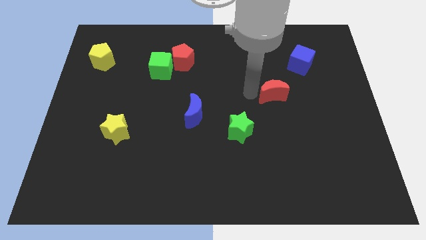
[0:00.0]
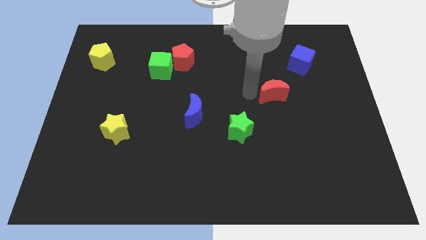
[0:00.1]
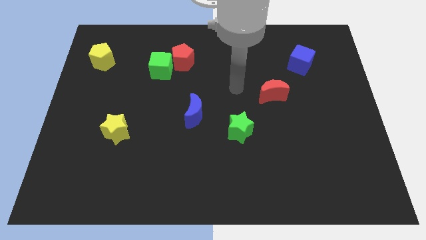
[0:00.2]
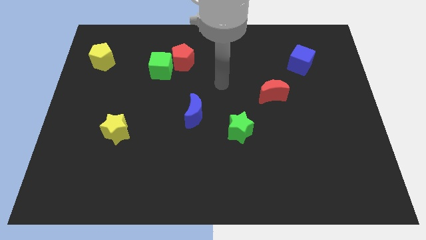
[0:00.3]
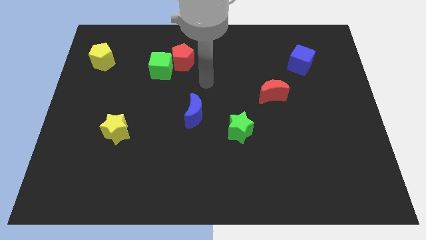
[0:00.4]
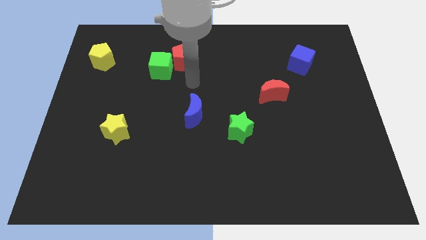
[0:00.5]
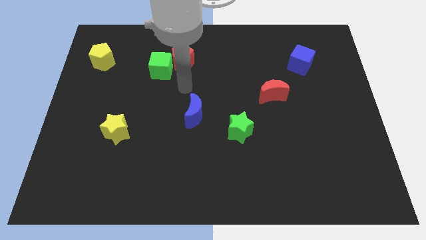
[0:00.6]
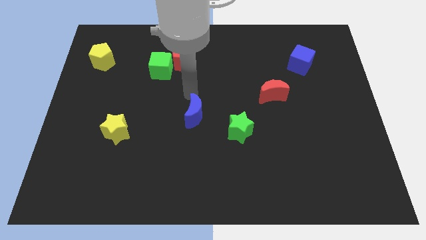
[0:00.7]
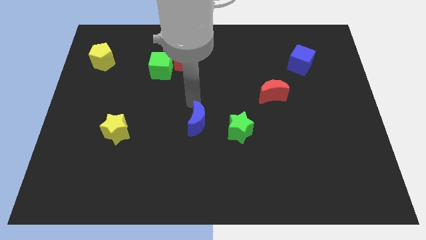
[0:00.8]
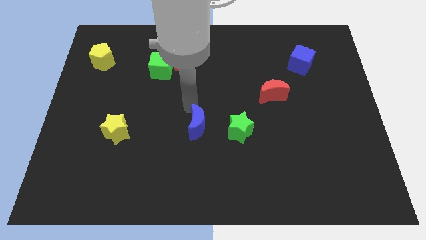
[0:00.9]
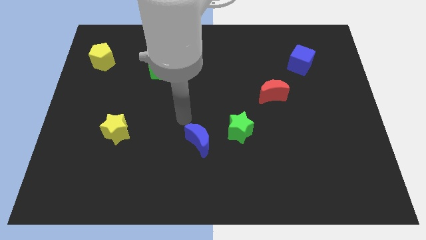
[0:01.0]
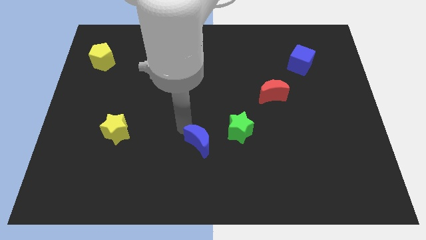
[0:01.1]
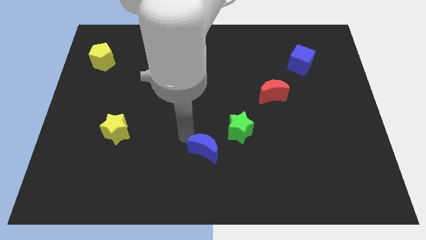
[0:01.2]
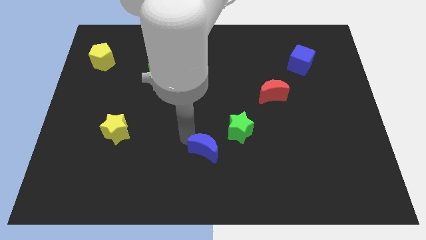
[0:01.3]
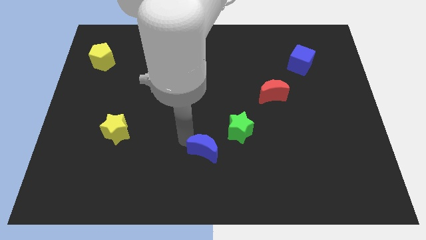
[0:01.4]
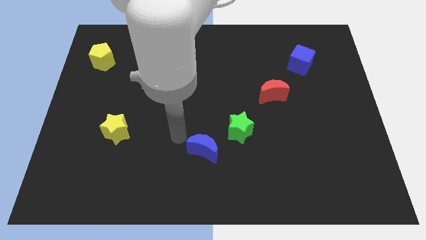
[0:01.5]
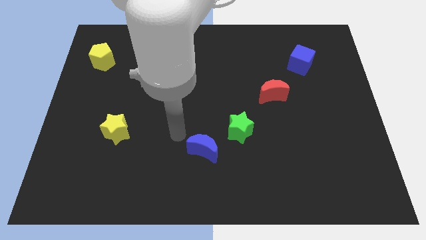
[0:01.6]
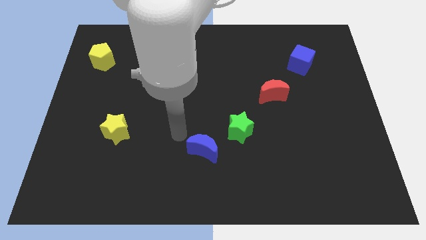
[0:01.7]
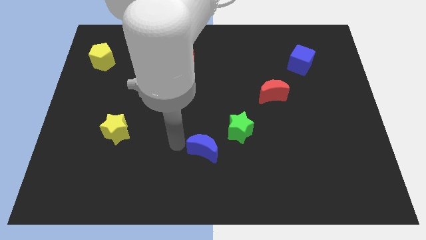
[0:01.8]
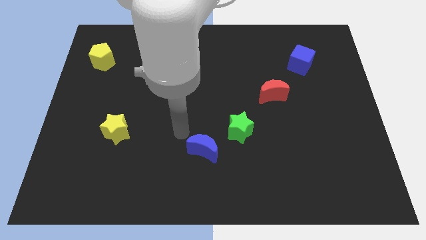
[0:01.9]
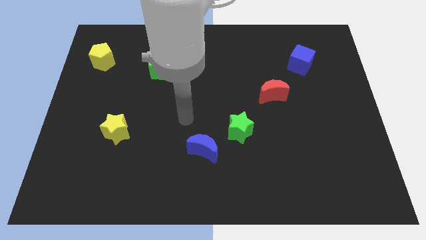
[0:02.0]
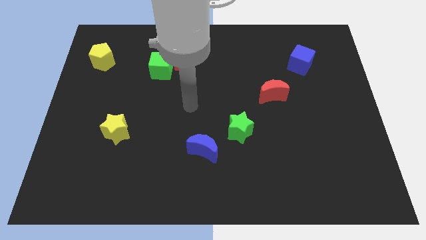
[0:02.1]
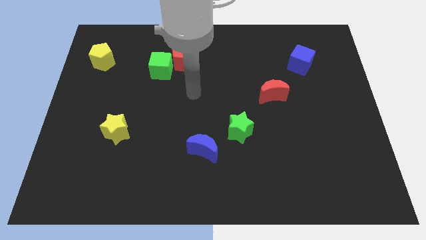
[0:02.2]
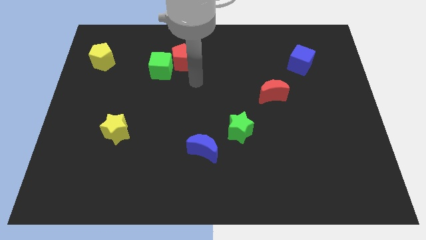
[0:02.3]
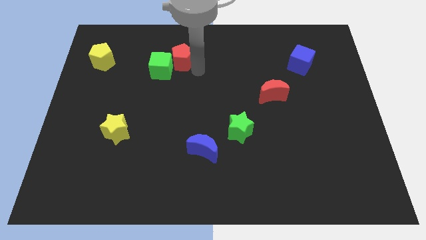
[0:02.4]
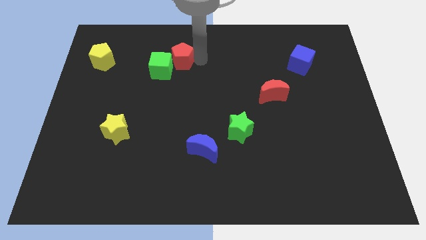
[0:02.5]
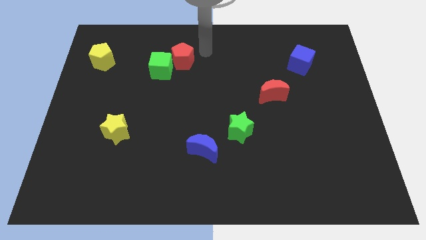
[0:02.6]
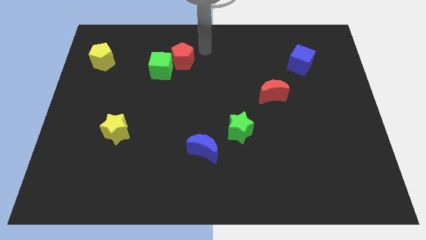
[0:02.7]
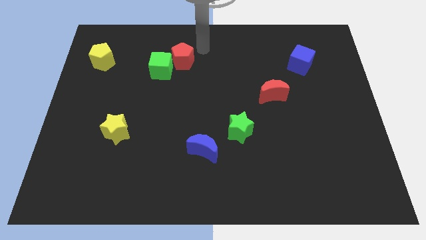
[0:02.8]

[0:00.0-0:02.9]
push blue crescent below the green star

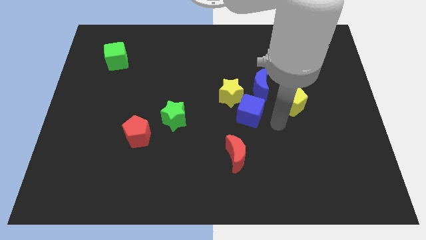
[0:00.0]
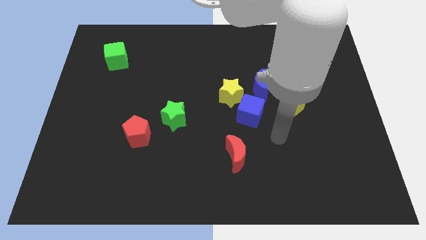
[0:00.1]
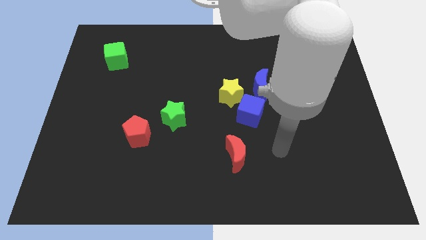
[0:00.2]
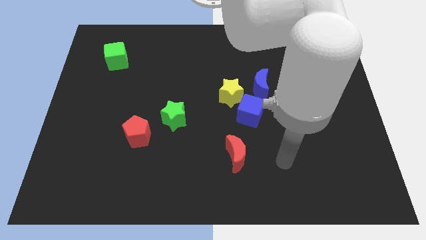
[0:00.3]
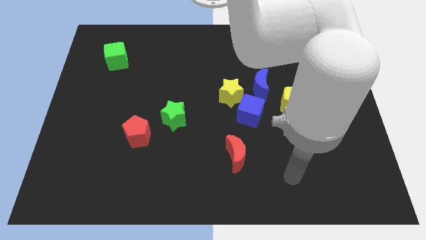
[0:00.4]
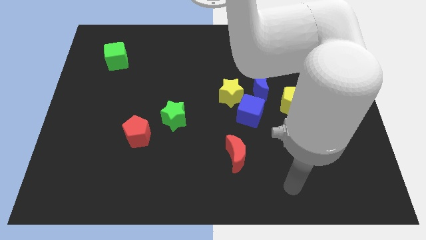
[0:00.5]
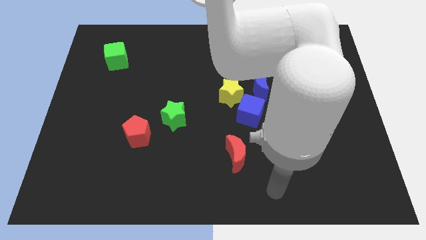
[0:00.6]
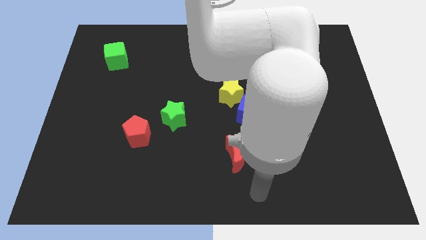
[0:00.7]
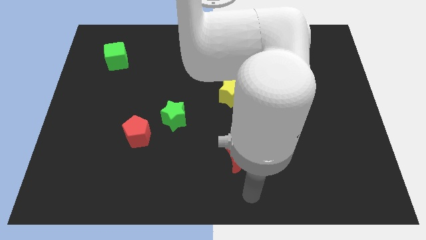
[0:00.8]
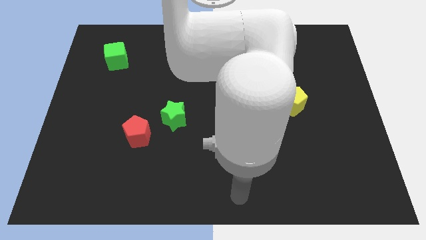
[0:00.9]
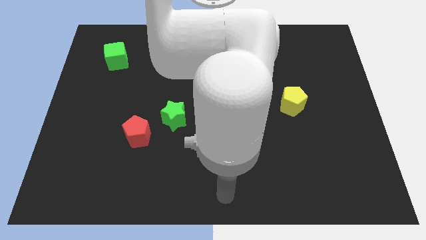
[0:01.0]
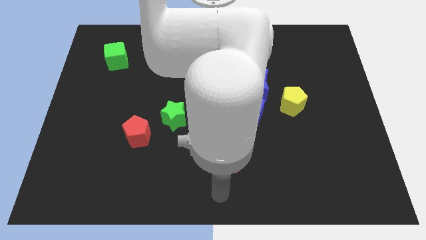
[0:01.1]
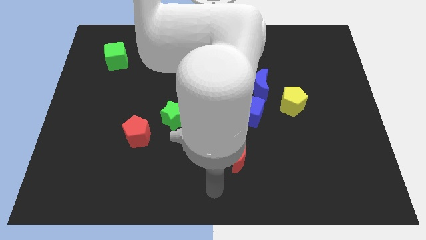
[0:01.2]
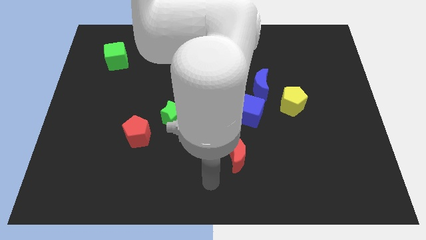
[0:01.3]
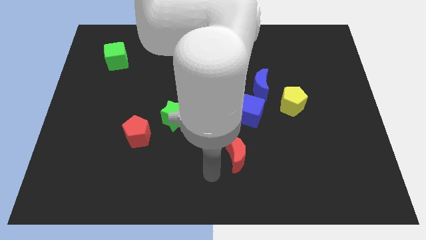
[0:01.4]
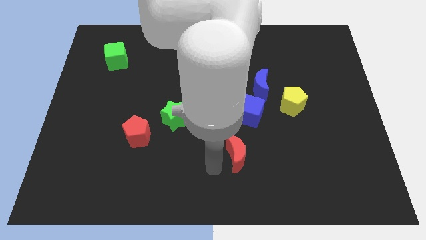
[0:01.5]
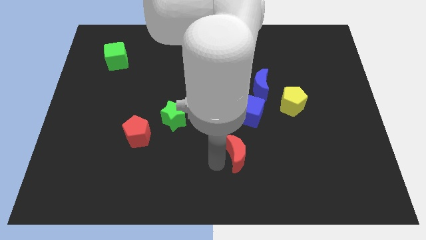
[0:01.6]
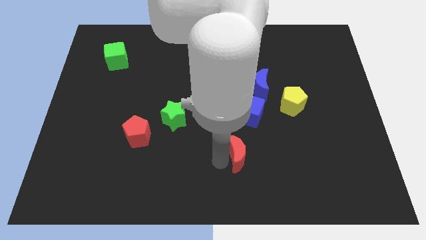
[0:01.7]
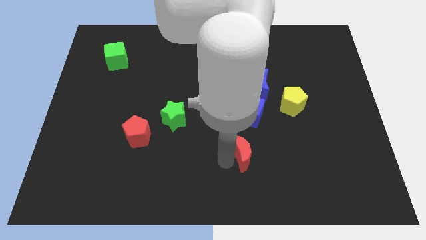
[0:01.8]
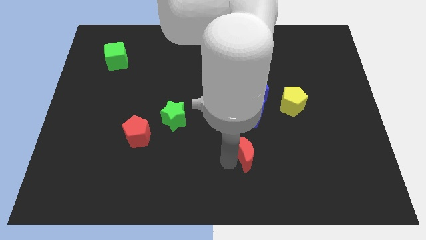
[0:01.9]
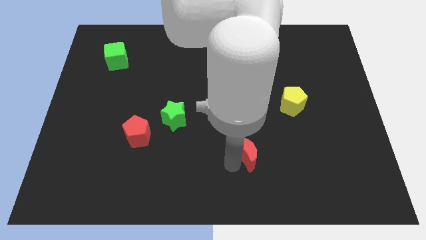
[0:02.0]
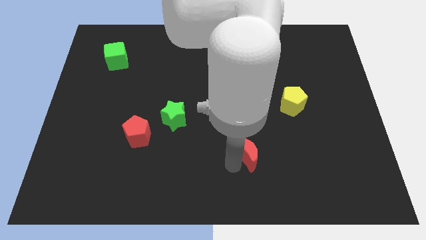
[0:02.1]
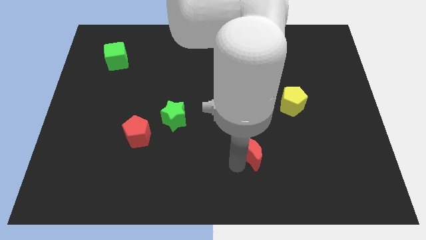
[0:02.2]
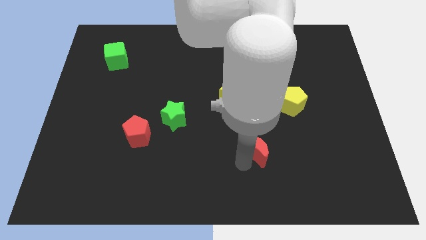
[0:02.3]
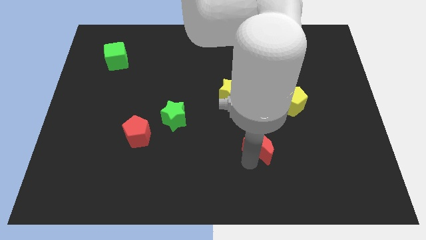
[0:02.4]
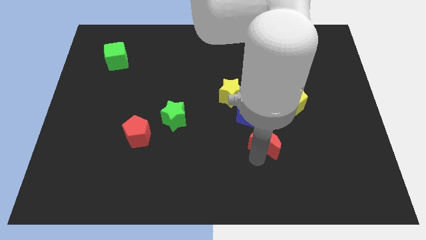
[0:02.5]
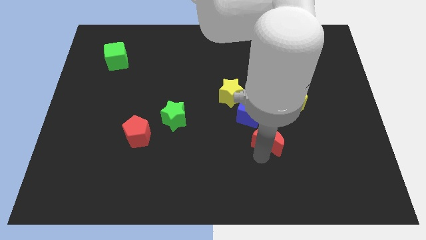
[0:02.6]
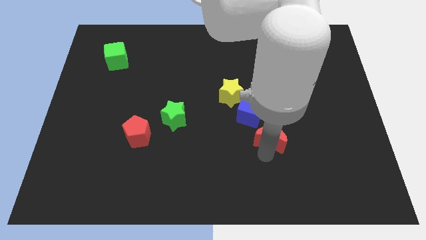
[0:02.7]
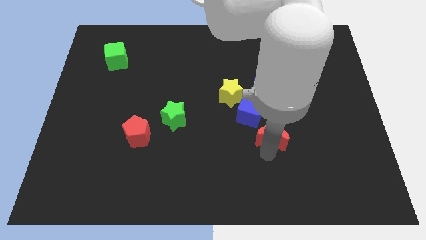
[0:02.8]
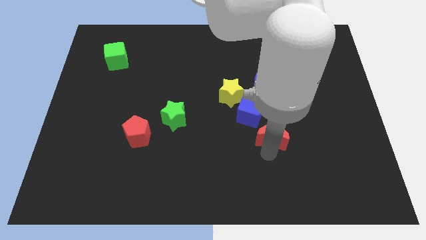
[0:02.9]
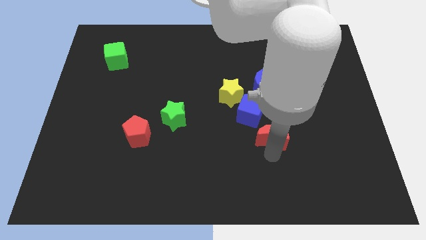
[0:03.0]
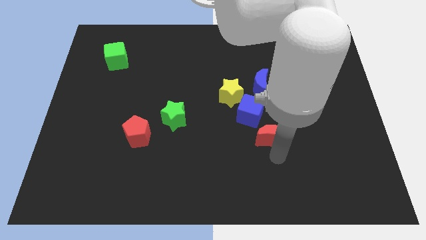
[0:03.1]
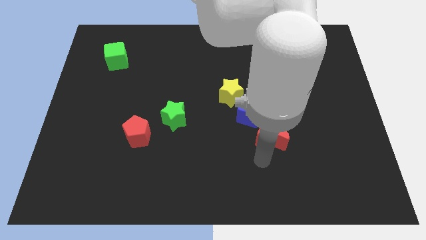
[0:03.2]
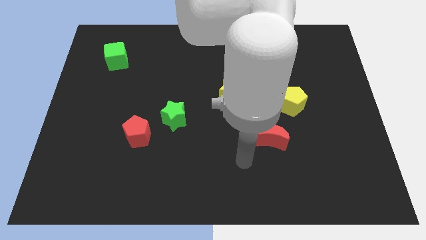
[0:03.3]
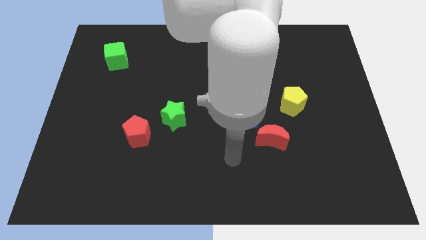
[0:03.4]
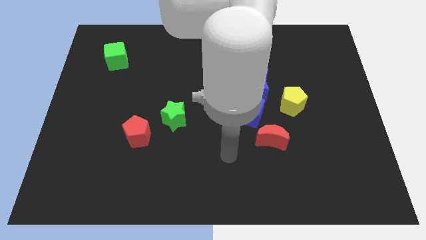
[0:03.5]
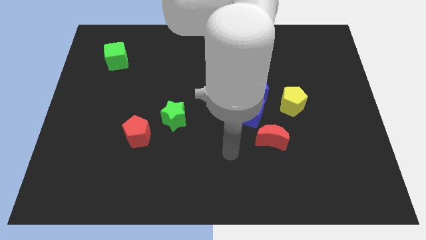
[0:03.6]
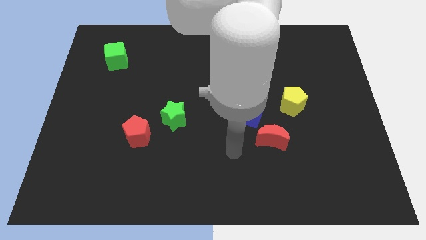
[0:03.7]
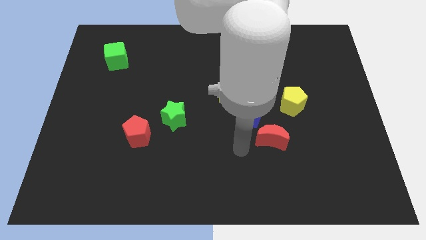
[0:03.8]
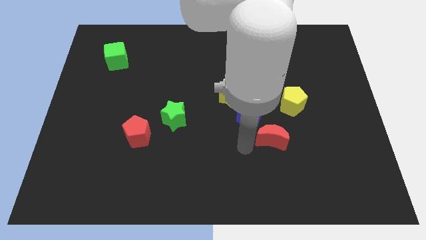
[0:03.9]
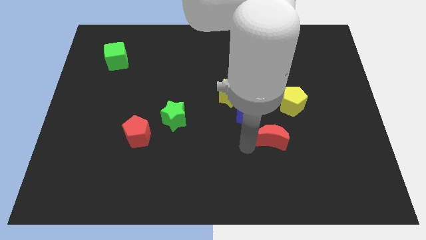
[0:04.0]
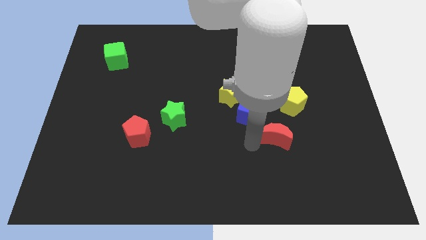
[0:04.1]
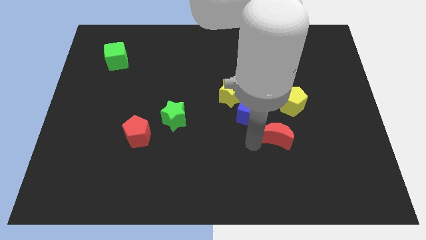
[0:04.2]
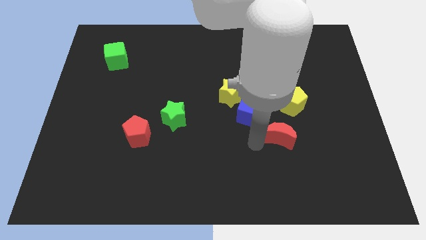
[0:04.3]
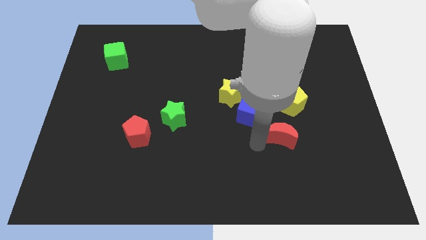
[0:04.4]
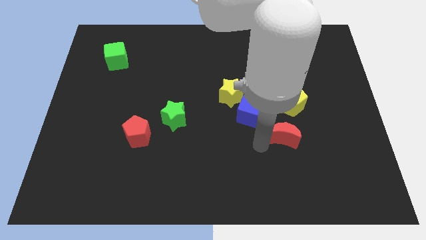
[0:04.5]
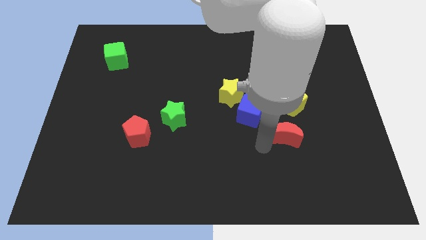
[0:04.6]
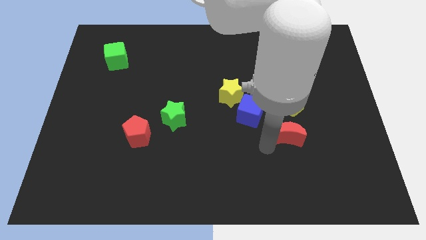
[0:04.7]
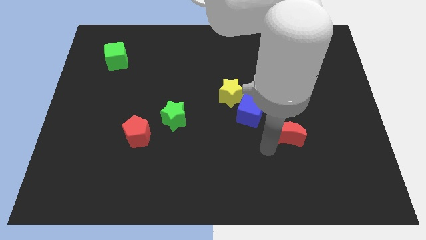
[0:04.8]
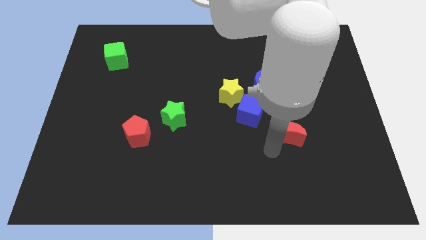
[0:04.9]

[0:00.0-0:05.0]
place the red moon to bottom of the yellow pentagon

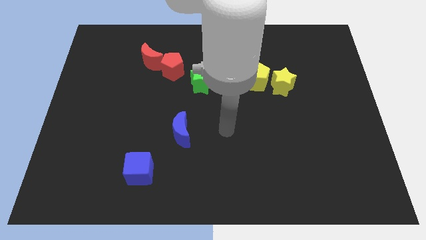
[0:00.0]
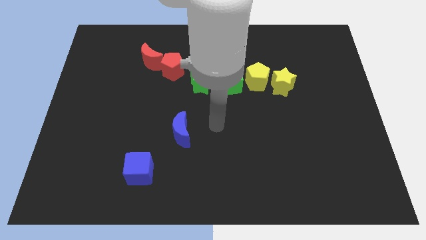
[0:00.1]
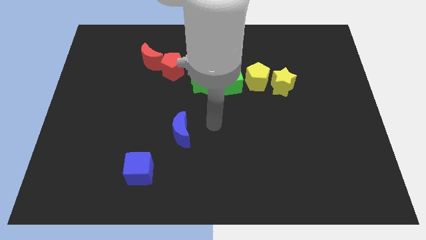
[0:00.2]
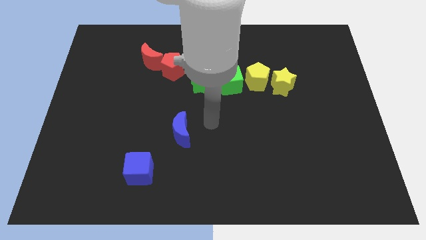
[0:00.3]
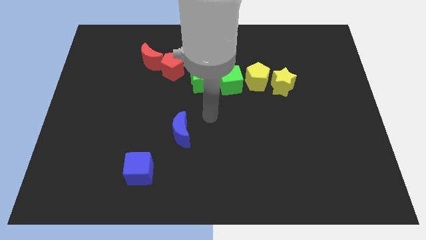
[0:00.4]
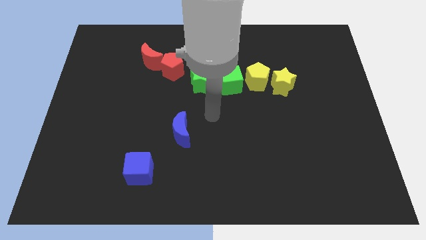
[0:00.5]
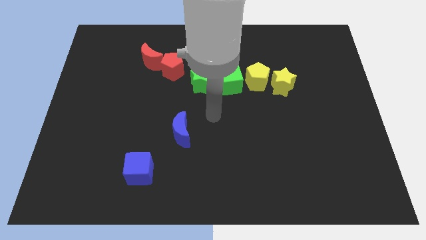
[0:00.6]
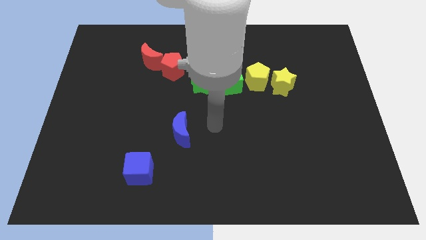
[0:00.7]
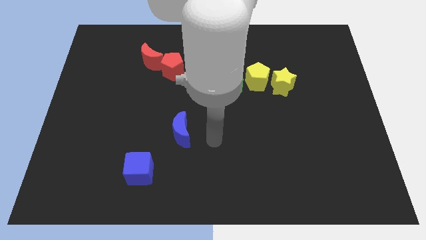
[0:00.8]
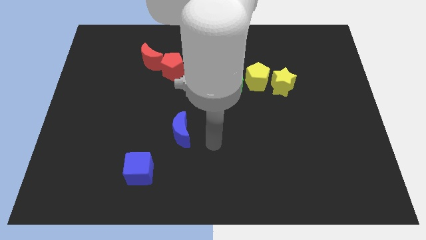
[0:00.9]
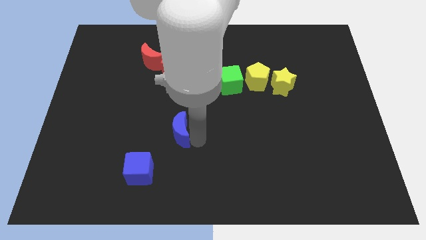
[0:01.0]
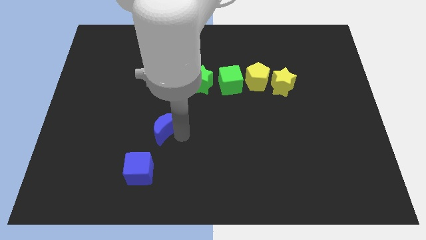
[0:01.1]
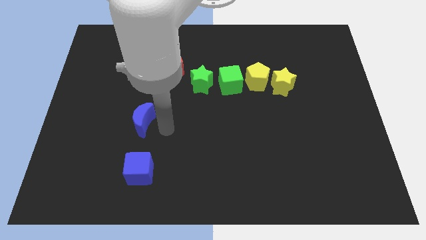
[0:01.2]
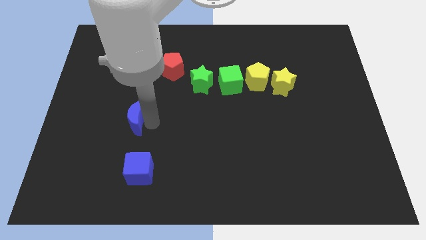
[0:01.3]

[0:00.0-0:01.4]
move blue moon to the top of blue cube
